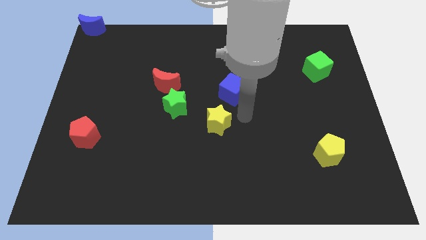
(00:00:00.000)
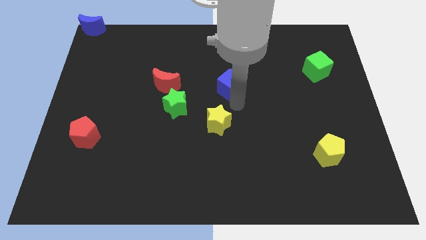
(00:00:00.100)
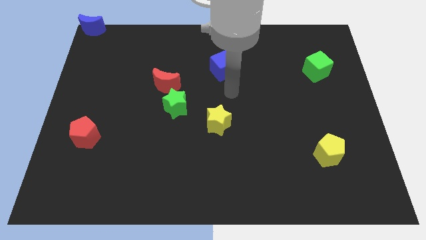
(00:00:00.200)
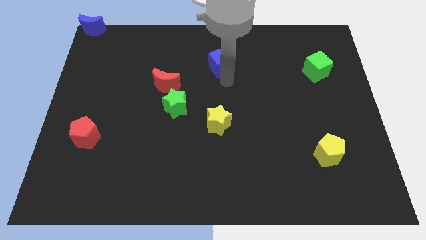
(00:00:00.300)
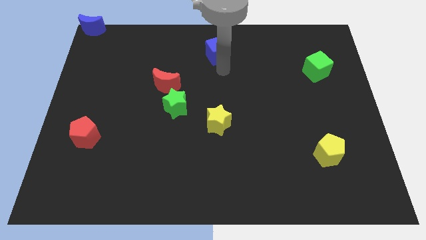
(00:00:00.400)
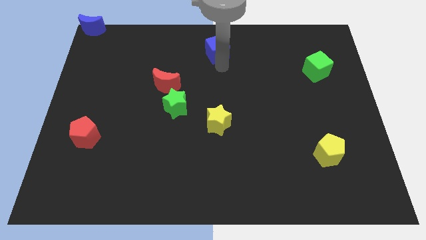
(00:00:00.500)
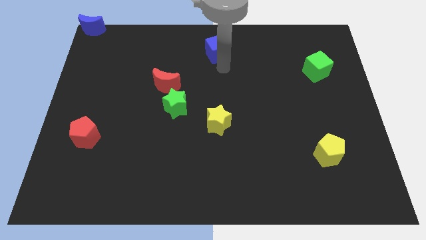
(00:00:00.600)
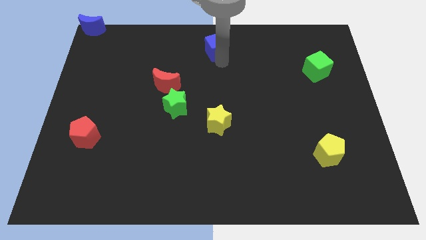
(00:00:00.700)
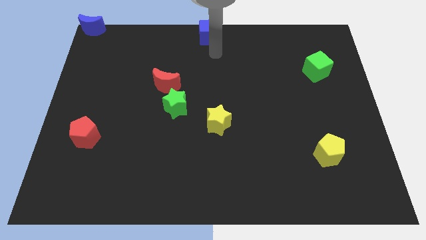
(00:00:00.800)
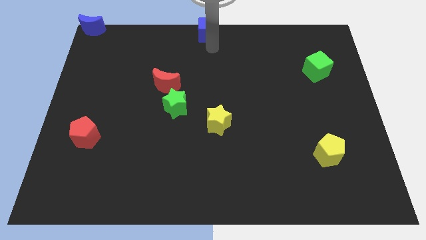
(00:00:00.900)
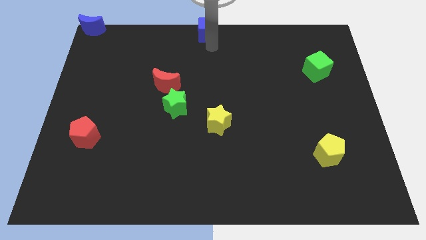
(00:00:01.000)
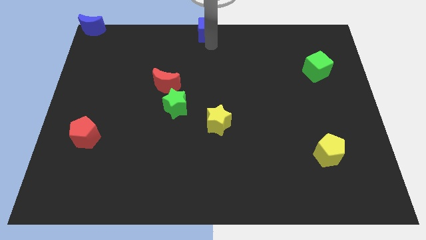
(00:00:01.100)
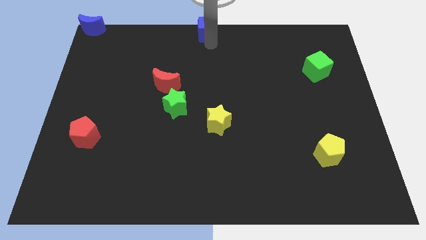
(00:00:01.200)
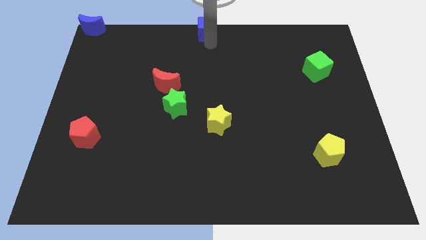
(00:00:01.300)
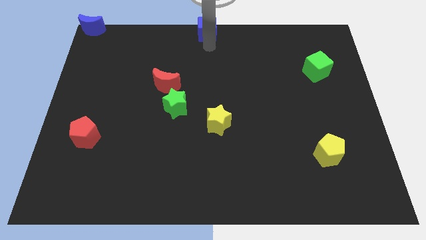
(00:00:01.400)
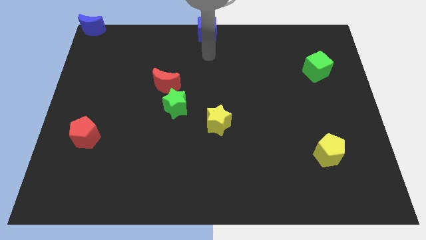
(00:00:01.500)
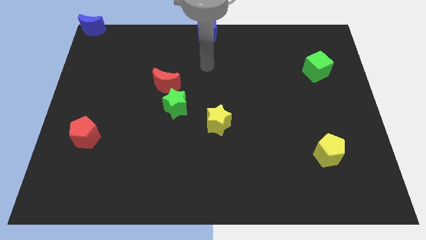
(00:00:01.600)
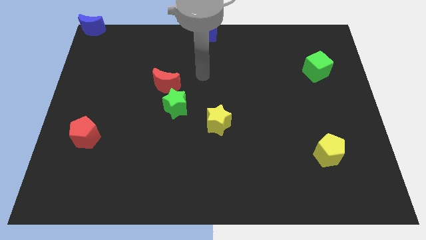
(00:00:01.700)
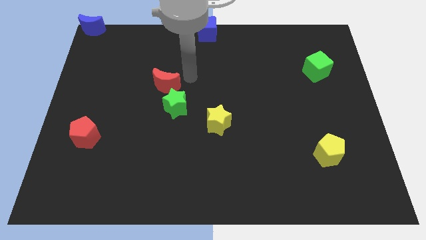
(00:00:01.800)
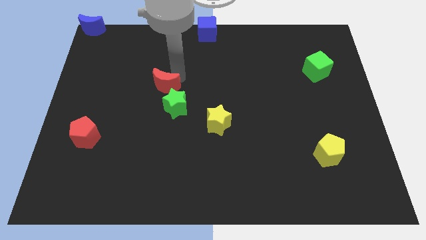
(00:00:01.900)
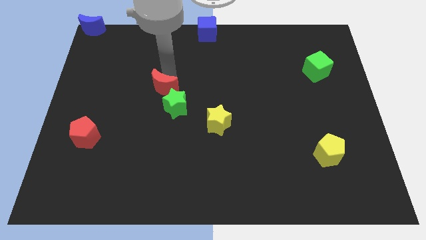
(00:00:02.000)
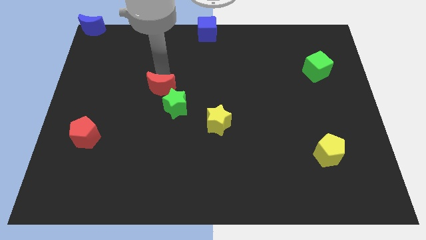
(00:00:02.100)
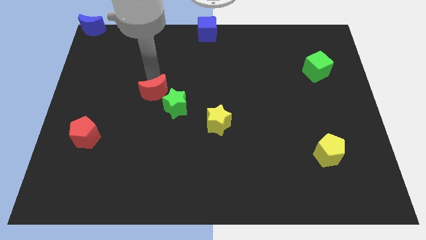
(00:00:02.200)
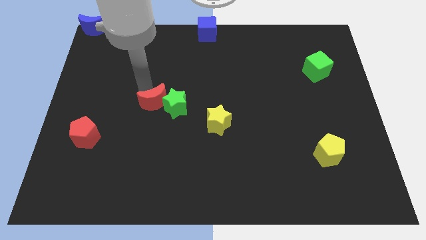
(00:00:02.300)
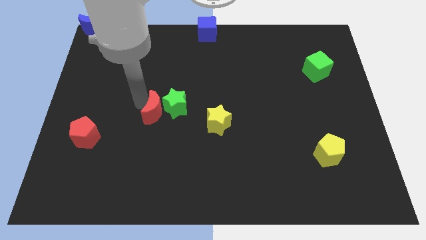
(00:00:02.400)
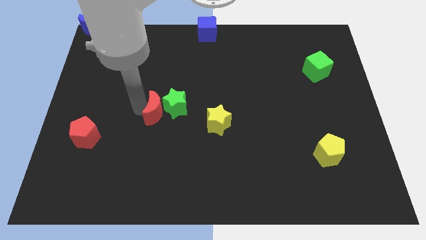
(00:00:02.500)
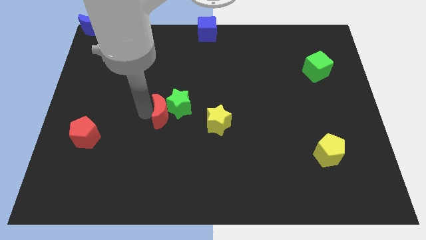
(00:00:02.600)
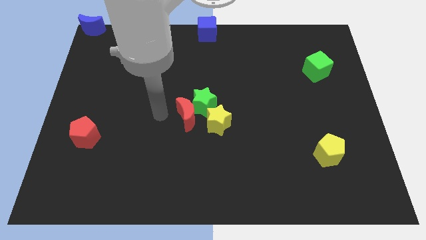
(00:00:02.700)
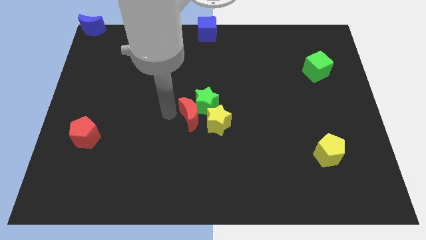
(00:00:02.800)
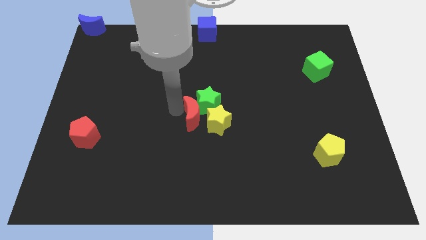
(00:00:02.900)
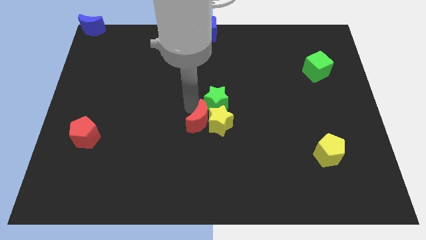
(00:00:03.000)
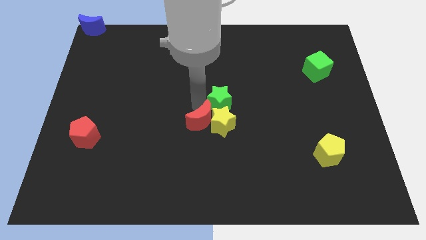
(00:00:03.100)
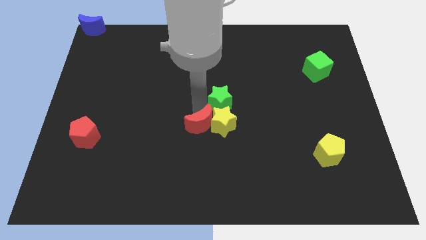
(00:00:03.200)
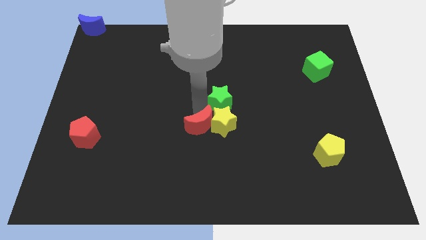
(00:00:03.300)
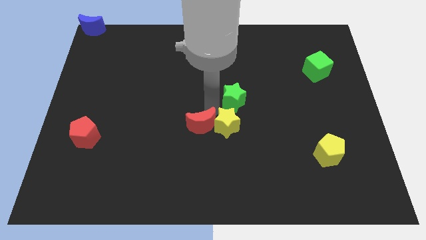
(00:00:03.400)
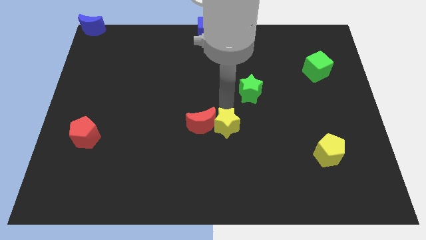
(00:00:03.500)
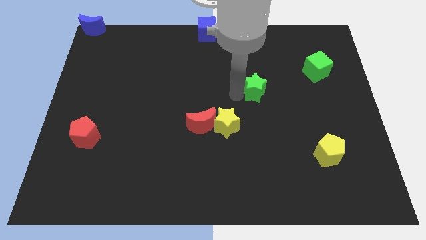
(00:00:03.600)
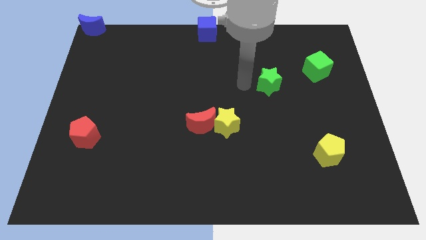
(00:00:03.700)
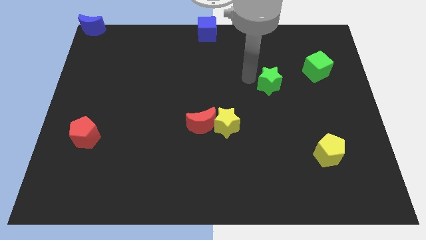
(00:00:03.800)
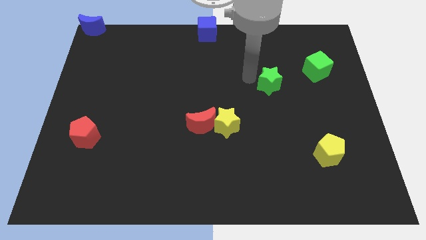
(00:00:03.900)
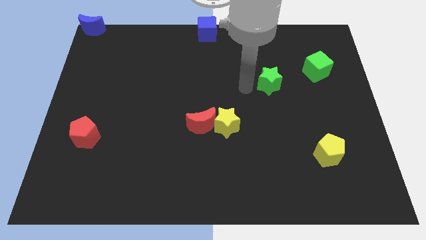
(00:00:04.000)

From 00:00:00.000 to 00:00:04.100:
push the green star with the red moon

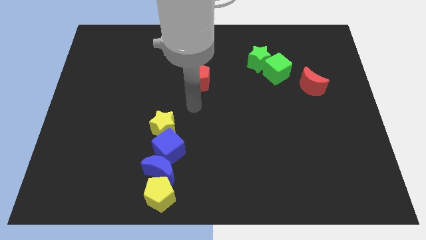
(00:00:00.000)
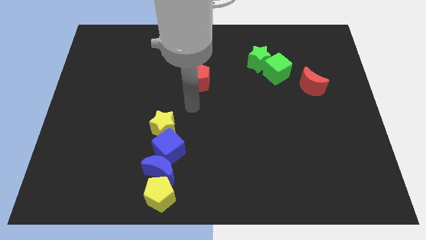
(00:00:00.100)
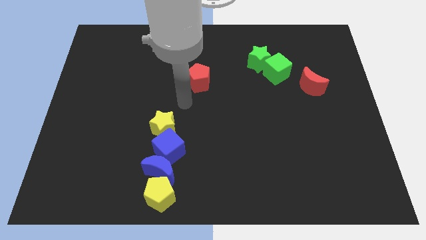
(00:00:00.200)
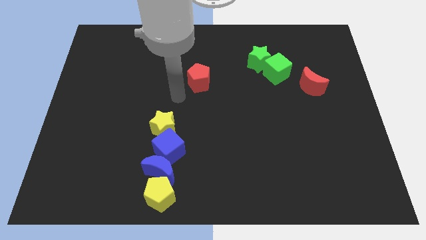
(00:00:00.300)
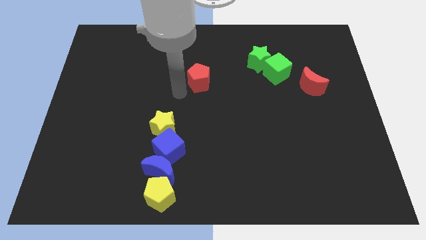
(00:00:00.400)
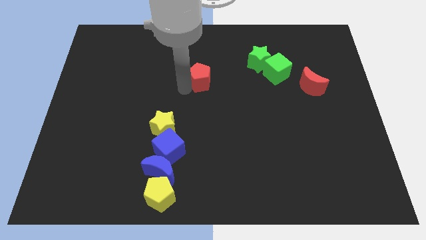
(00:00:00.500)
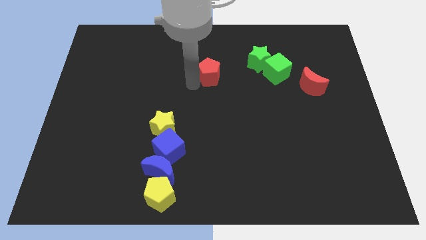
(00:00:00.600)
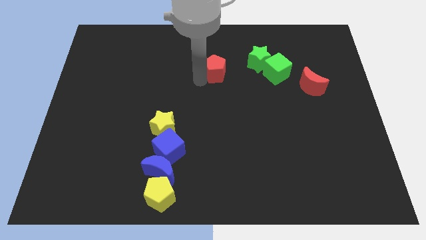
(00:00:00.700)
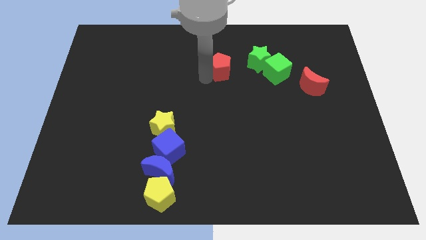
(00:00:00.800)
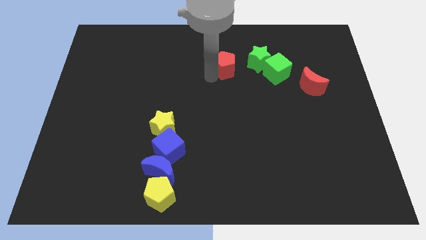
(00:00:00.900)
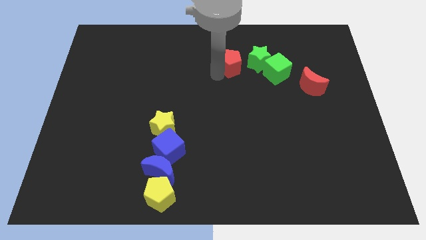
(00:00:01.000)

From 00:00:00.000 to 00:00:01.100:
slide the red pentagon close to the left side of the green star

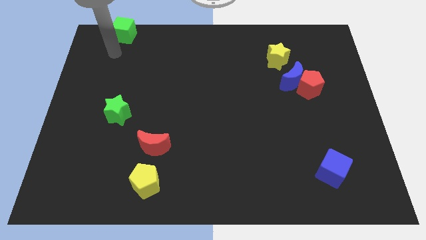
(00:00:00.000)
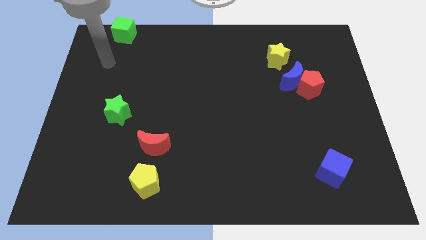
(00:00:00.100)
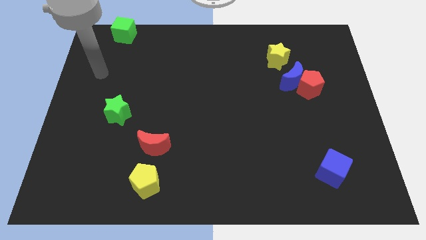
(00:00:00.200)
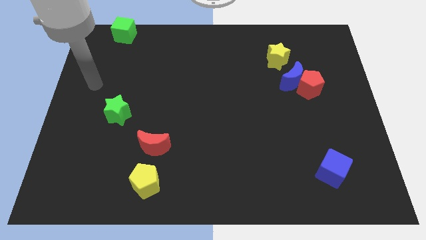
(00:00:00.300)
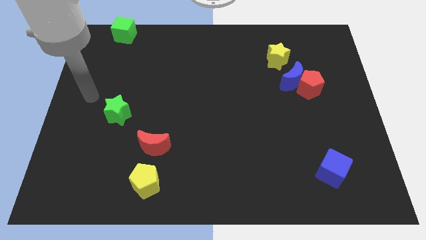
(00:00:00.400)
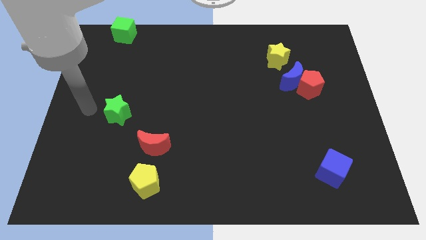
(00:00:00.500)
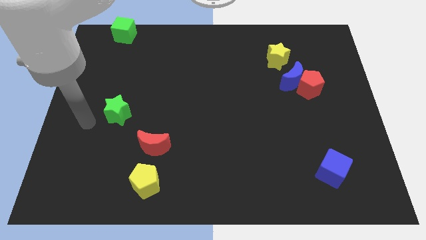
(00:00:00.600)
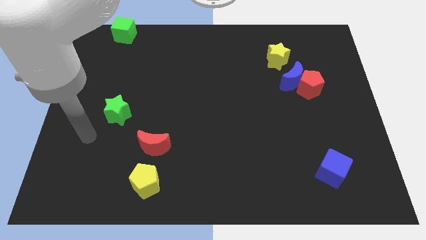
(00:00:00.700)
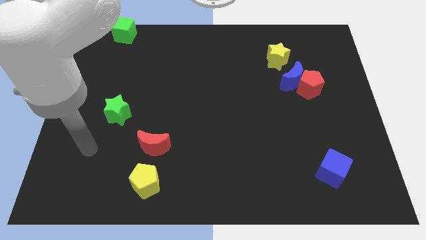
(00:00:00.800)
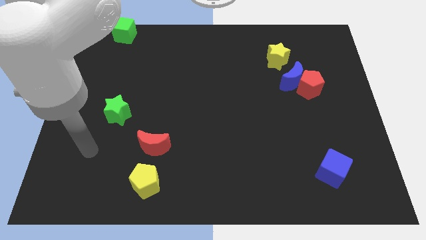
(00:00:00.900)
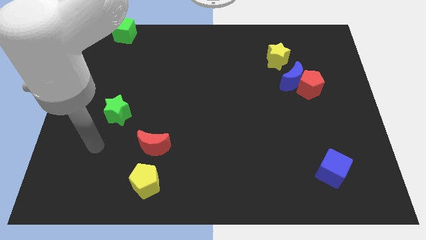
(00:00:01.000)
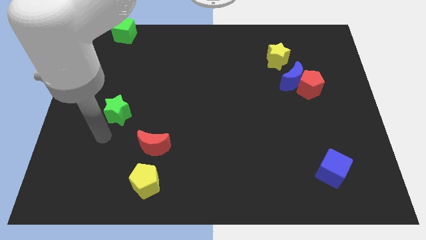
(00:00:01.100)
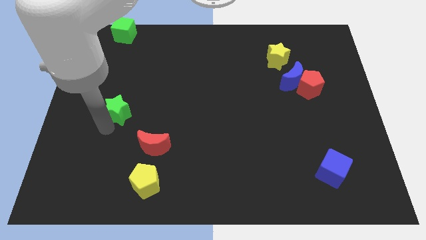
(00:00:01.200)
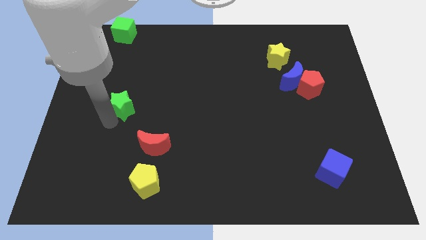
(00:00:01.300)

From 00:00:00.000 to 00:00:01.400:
tap the green star

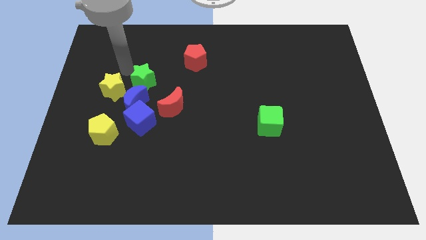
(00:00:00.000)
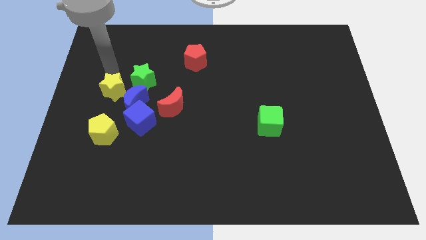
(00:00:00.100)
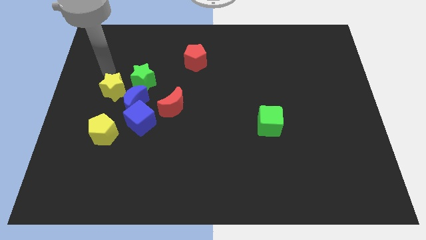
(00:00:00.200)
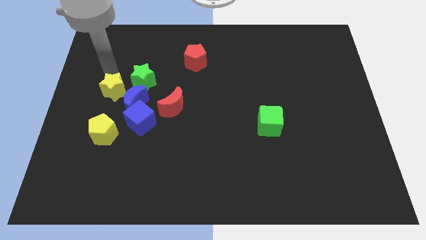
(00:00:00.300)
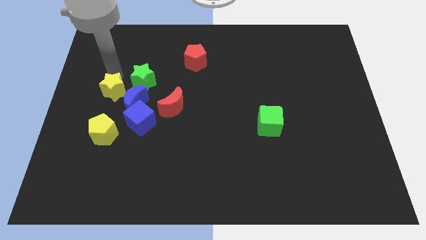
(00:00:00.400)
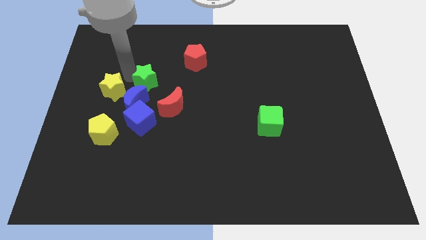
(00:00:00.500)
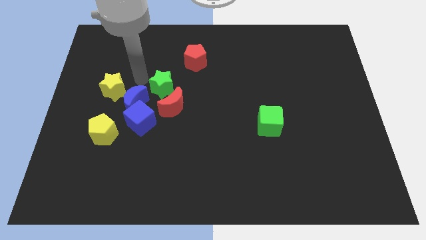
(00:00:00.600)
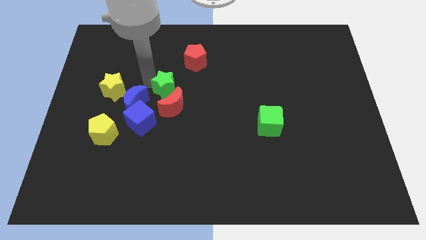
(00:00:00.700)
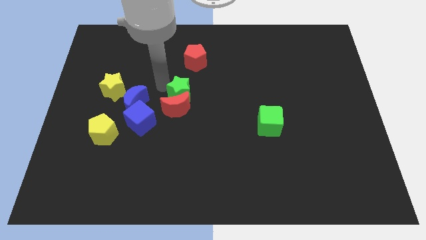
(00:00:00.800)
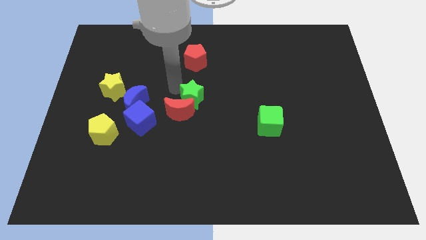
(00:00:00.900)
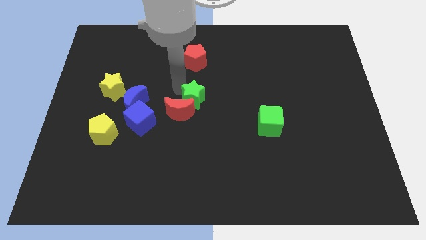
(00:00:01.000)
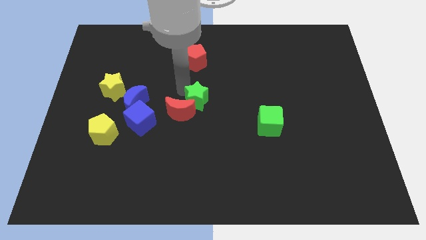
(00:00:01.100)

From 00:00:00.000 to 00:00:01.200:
place green star on top right of red moon

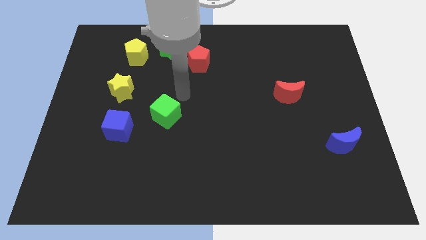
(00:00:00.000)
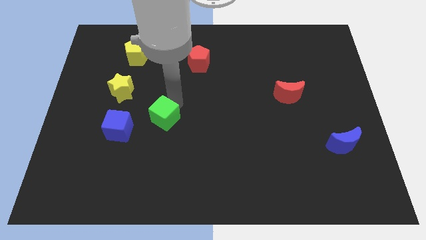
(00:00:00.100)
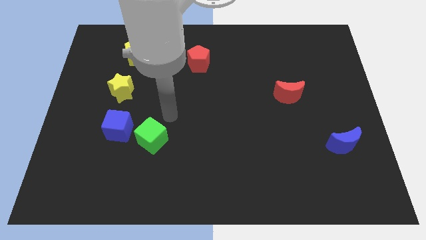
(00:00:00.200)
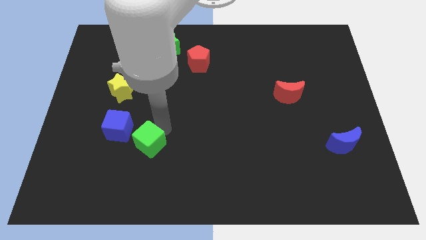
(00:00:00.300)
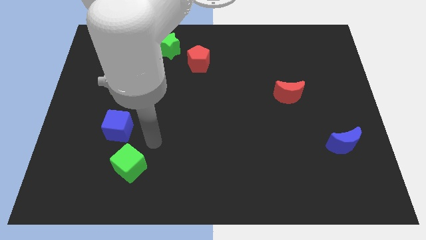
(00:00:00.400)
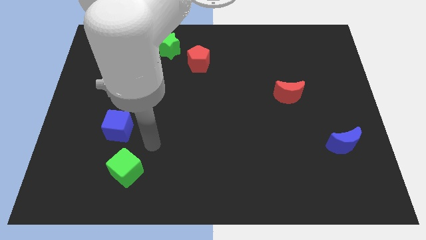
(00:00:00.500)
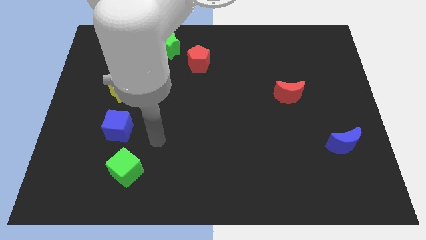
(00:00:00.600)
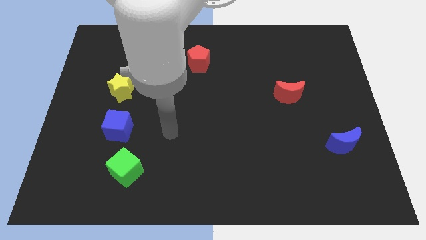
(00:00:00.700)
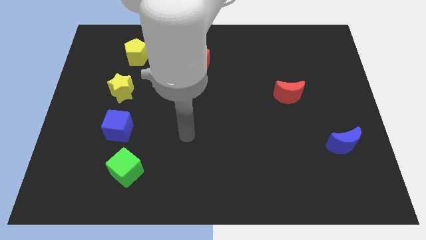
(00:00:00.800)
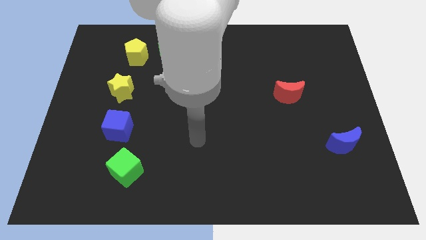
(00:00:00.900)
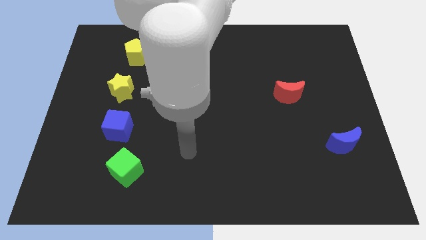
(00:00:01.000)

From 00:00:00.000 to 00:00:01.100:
place the green cube to the bottom of the blue cube
